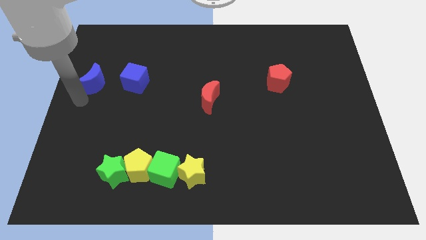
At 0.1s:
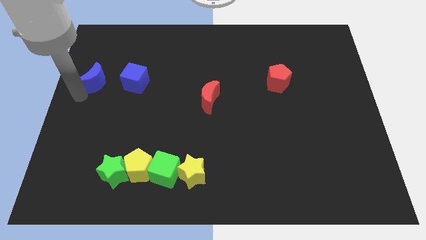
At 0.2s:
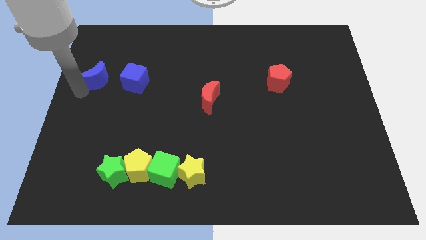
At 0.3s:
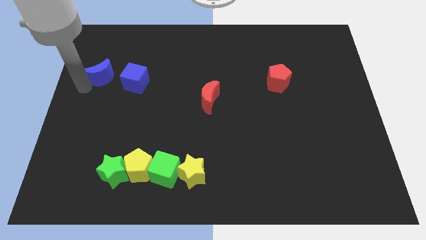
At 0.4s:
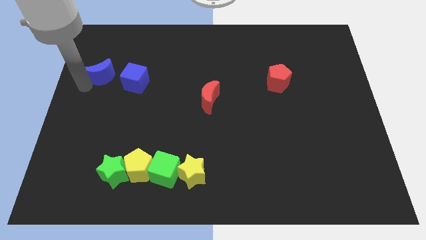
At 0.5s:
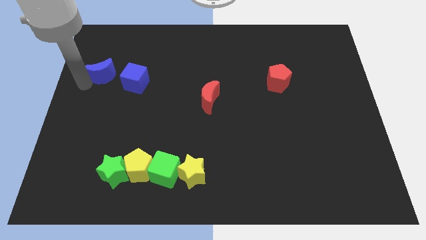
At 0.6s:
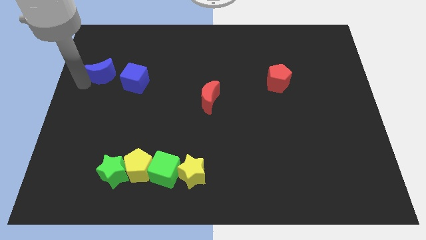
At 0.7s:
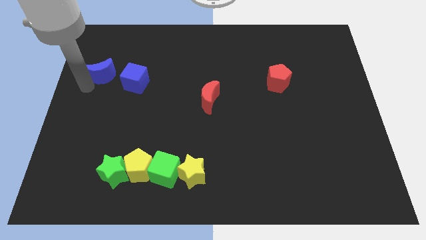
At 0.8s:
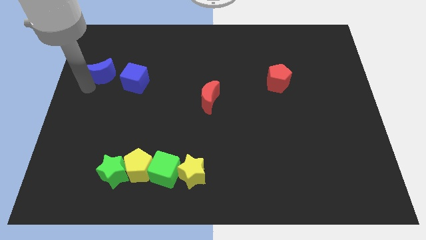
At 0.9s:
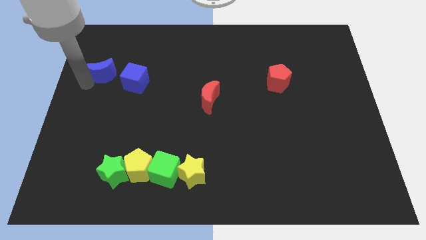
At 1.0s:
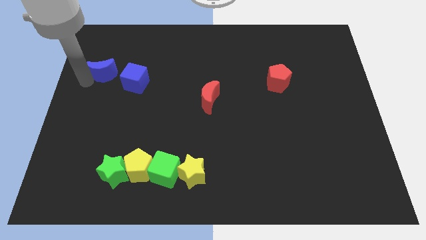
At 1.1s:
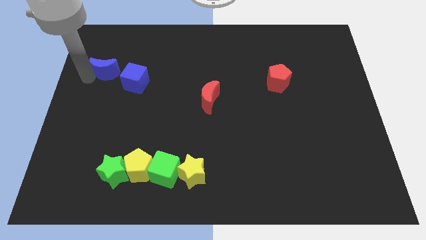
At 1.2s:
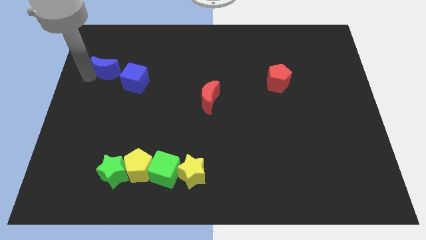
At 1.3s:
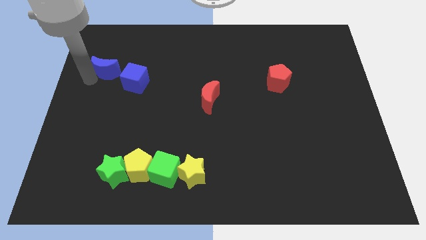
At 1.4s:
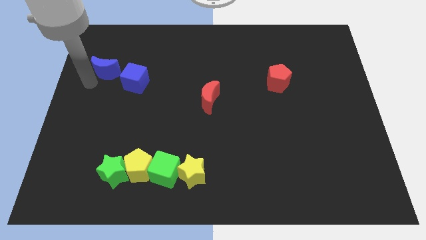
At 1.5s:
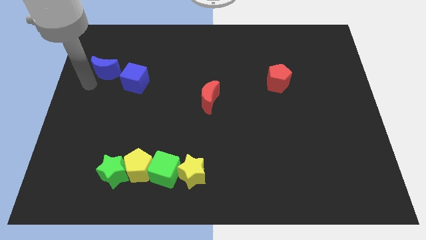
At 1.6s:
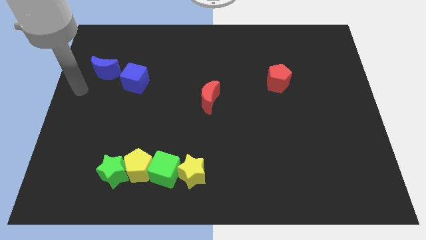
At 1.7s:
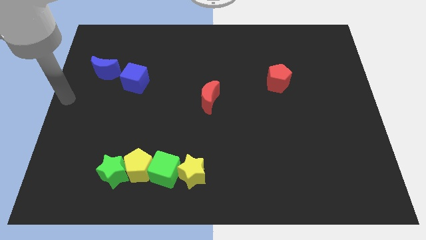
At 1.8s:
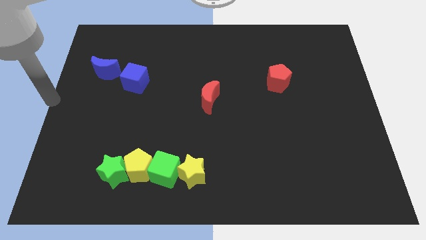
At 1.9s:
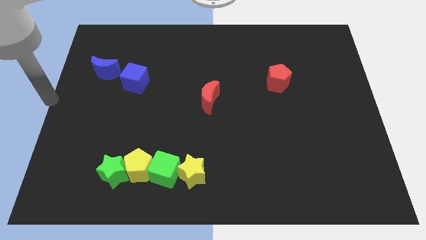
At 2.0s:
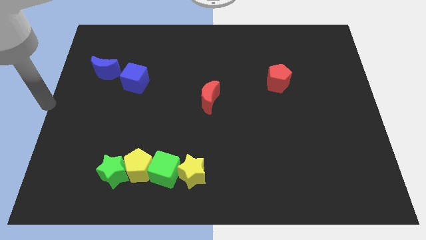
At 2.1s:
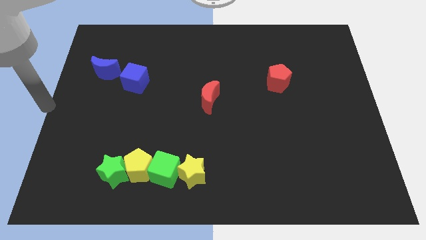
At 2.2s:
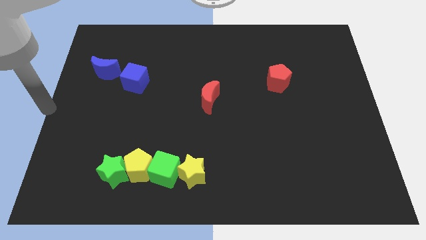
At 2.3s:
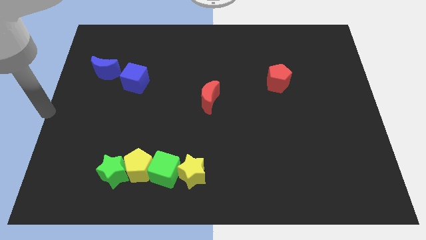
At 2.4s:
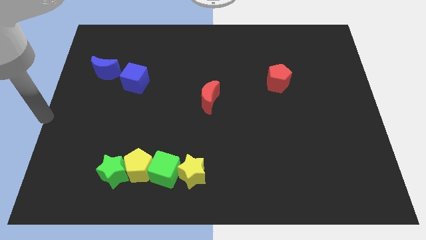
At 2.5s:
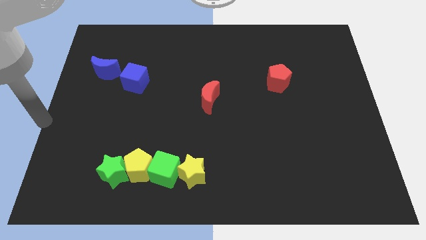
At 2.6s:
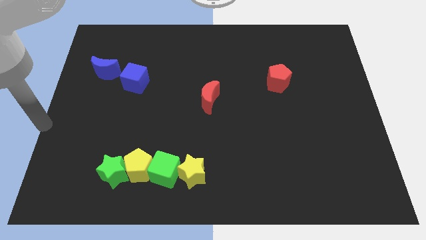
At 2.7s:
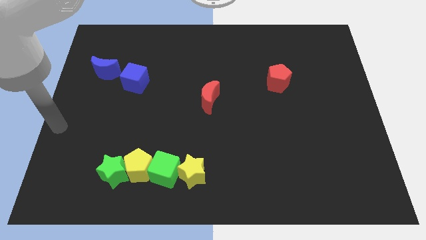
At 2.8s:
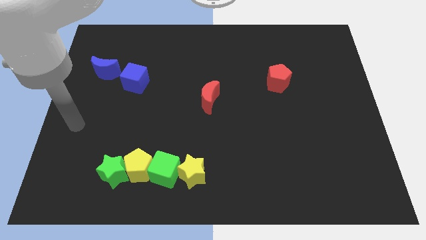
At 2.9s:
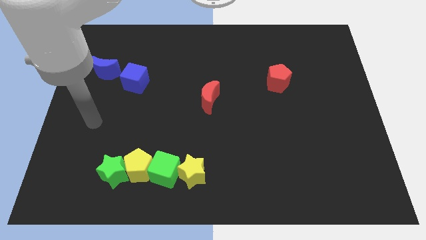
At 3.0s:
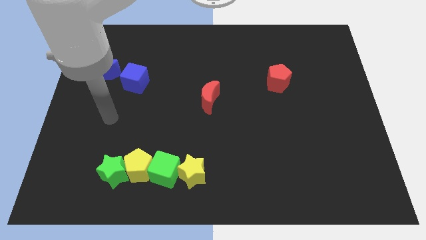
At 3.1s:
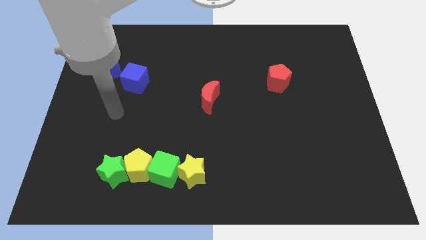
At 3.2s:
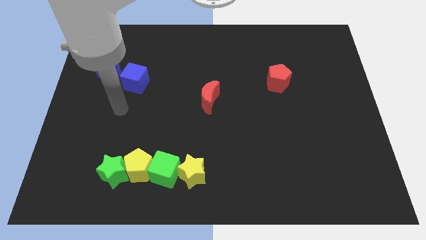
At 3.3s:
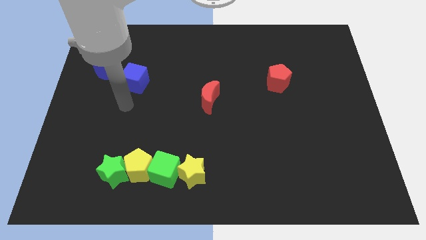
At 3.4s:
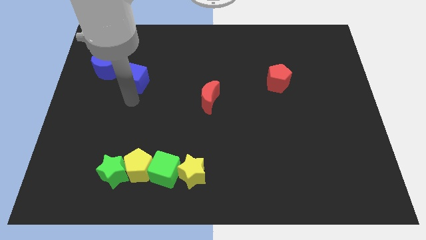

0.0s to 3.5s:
slide the blue crescent to the top left side of the blue cube

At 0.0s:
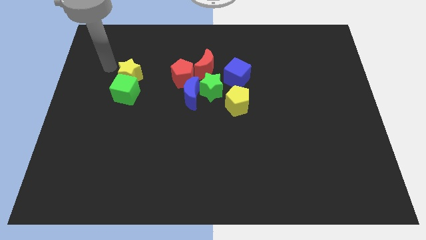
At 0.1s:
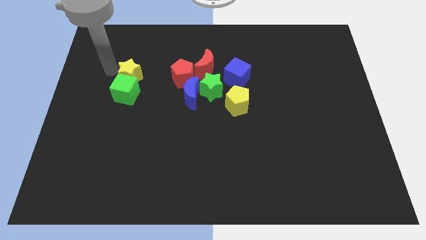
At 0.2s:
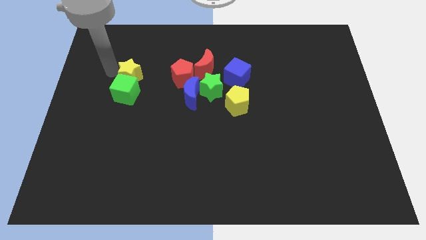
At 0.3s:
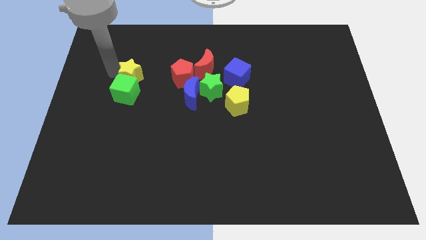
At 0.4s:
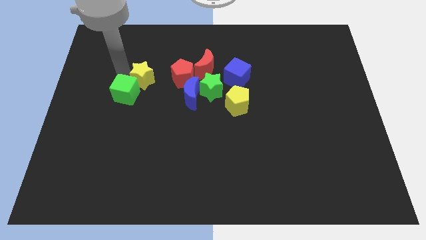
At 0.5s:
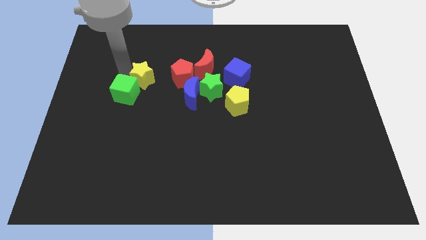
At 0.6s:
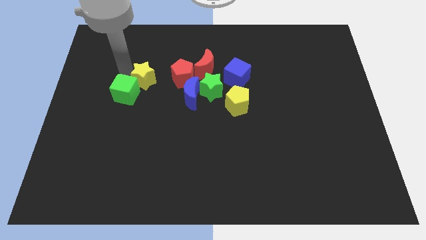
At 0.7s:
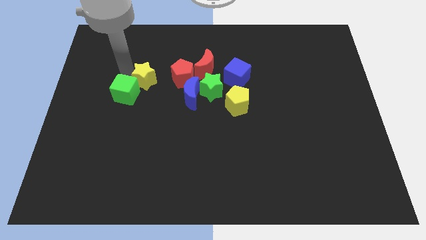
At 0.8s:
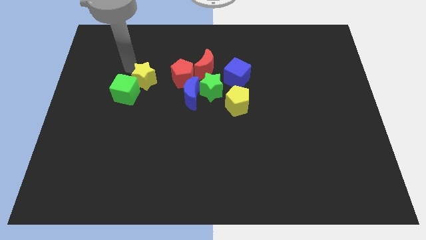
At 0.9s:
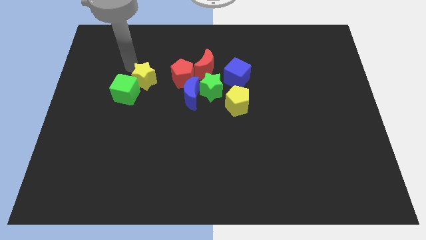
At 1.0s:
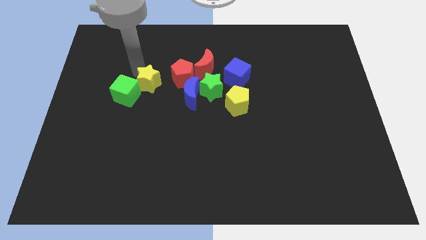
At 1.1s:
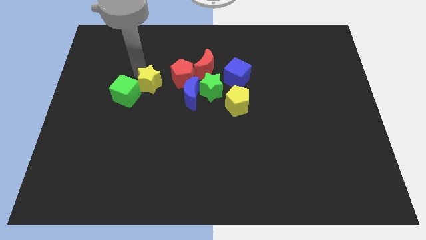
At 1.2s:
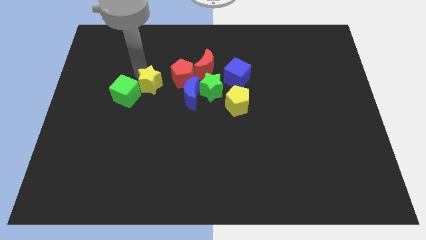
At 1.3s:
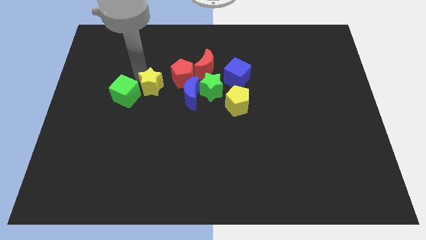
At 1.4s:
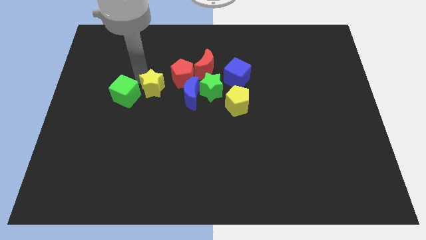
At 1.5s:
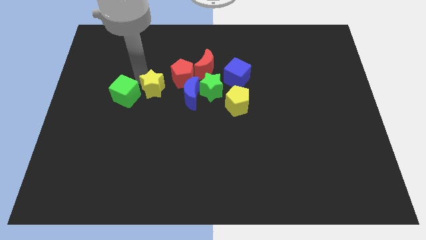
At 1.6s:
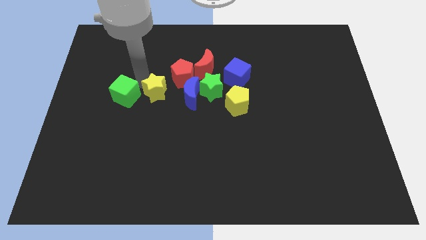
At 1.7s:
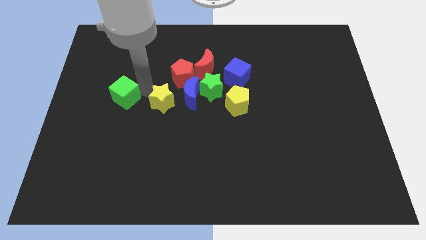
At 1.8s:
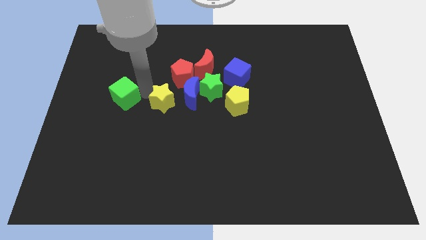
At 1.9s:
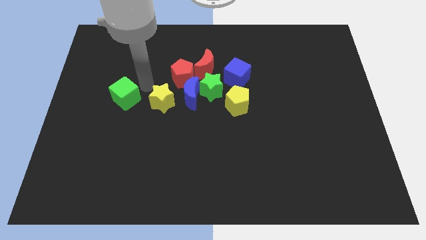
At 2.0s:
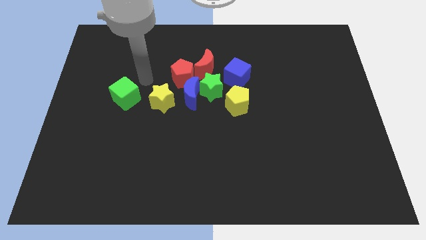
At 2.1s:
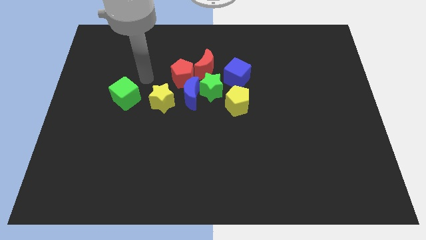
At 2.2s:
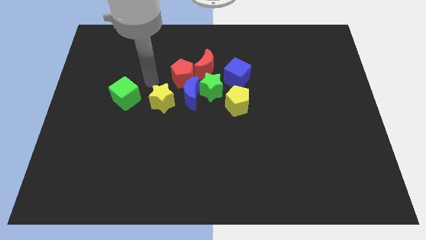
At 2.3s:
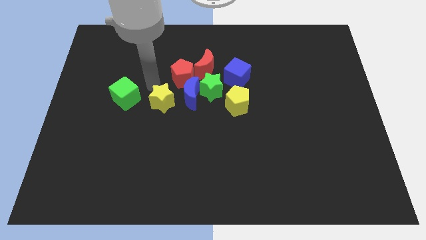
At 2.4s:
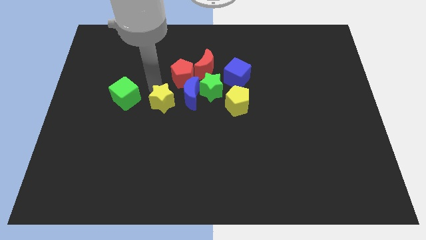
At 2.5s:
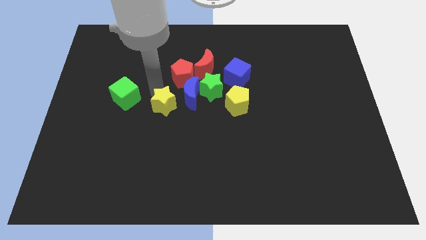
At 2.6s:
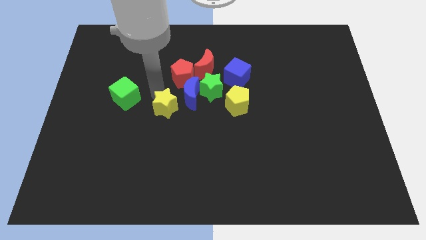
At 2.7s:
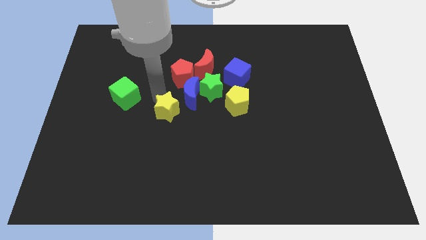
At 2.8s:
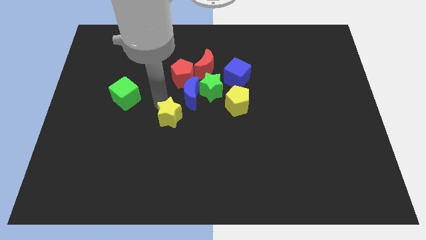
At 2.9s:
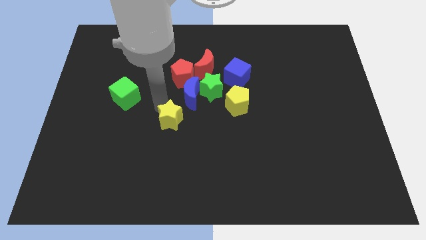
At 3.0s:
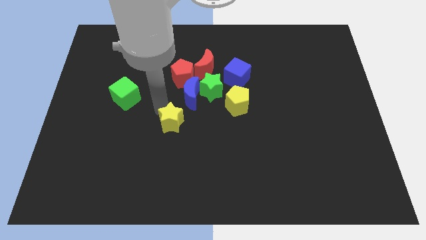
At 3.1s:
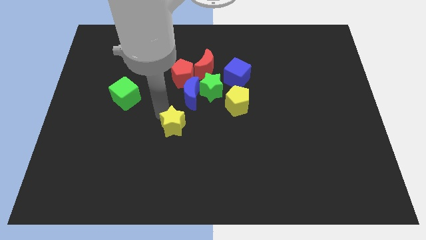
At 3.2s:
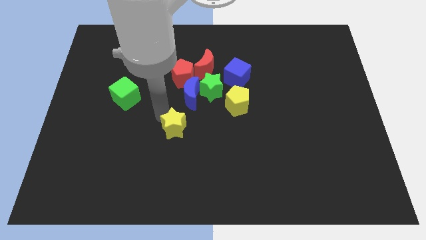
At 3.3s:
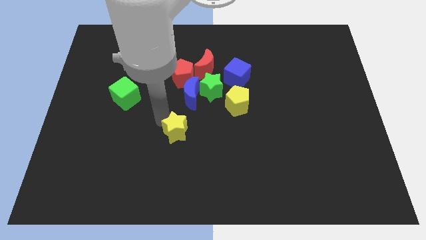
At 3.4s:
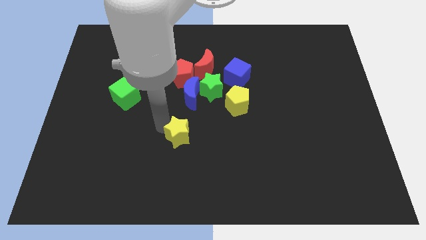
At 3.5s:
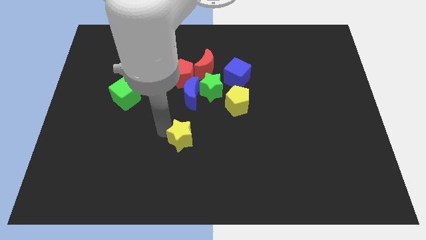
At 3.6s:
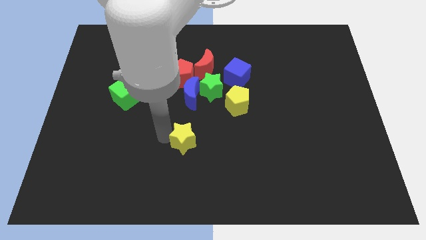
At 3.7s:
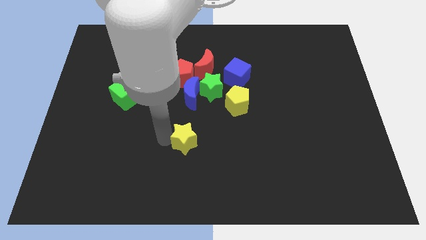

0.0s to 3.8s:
push the yellow star to the bottom side of the table

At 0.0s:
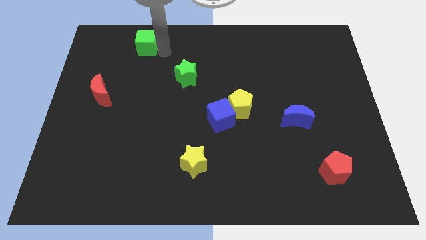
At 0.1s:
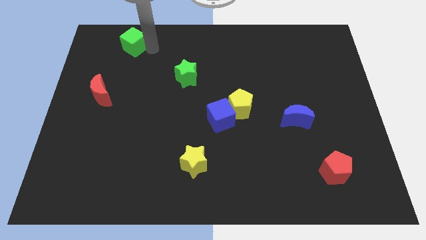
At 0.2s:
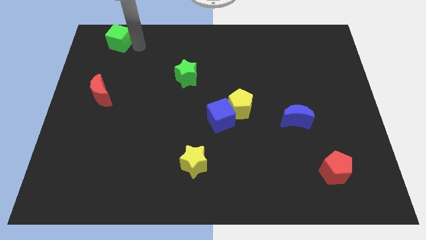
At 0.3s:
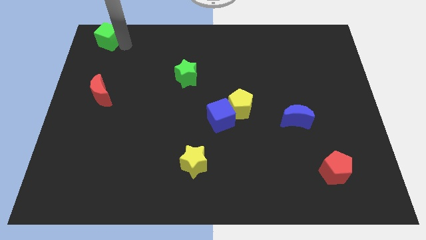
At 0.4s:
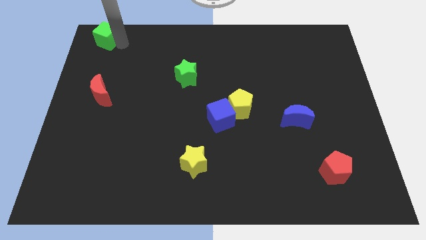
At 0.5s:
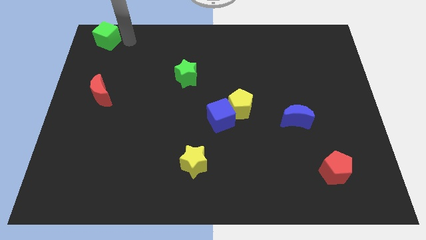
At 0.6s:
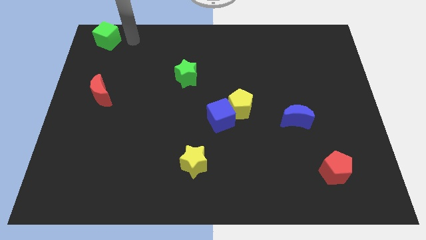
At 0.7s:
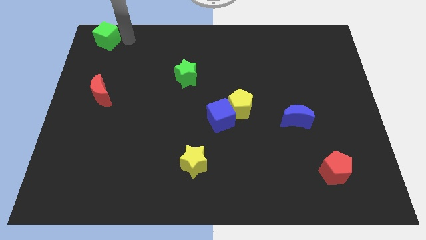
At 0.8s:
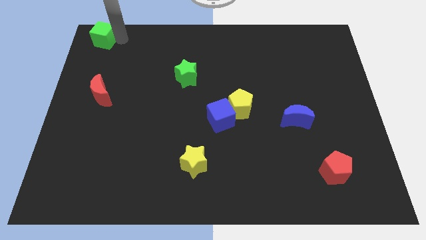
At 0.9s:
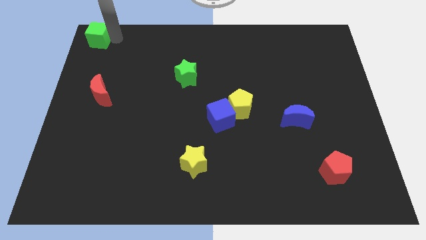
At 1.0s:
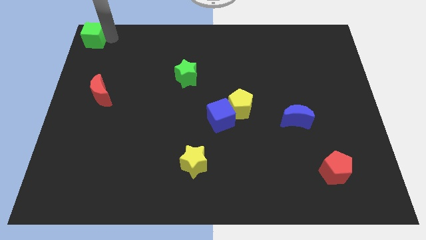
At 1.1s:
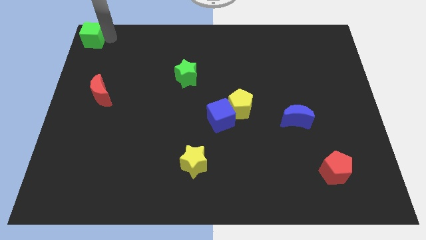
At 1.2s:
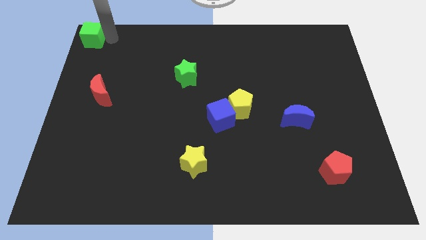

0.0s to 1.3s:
push the green cube to the top left comer of the board

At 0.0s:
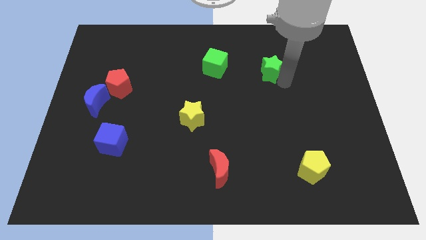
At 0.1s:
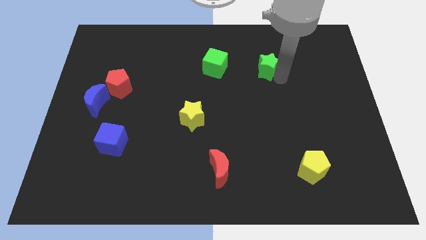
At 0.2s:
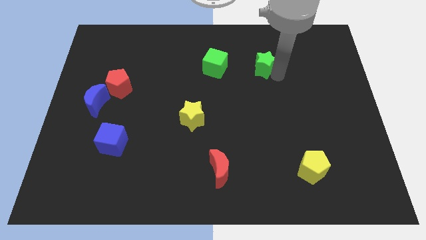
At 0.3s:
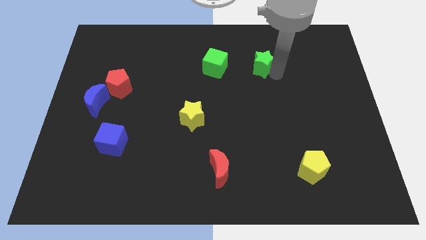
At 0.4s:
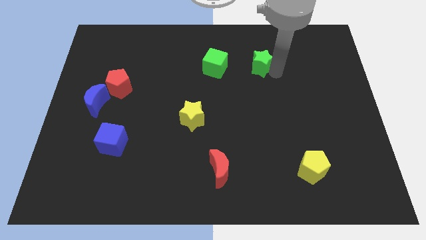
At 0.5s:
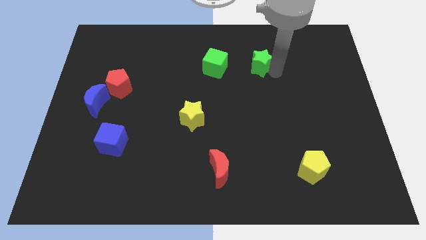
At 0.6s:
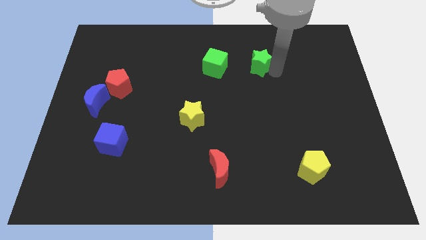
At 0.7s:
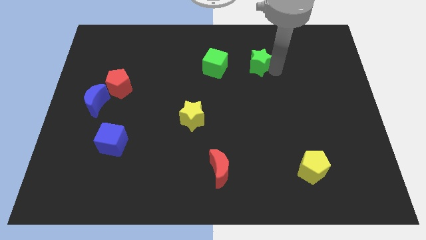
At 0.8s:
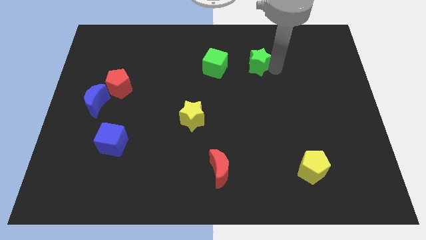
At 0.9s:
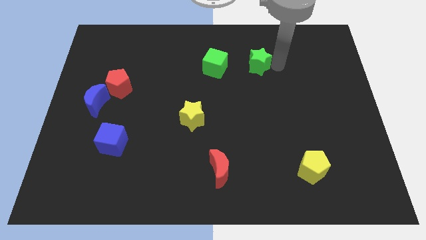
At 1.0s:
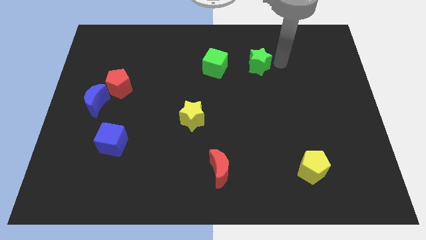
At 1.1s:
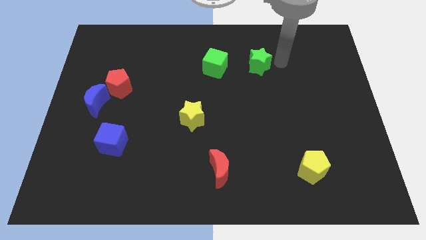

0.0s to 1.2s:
push green star parallel to green cube
